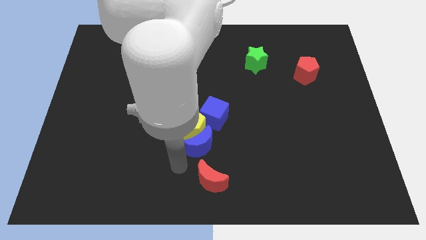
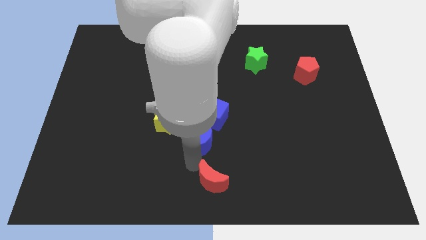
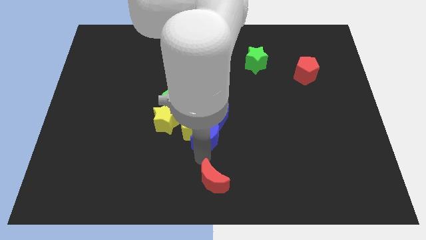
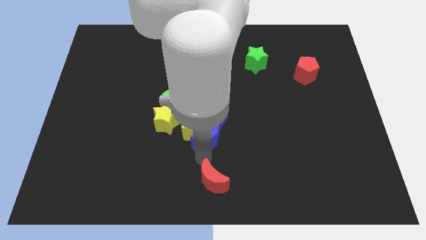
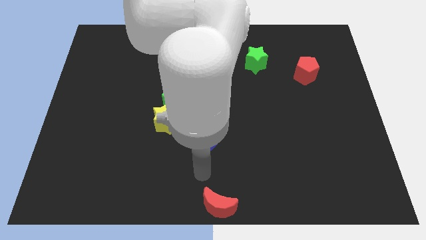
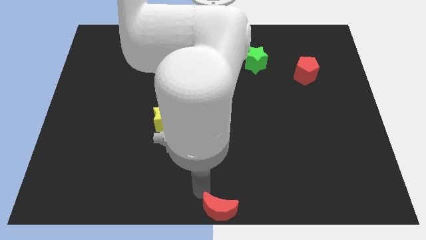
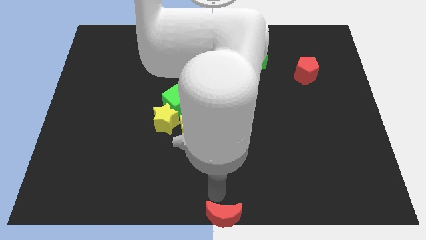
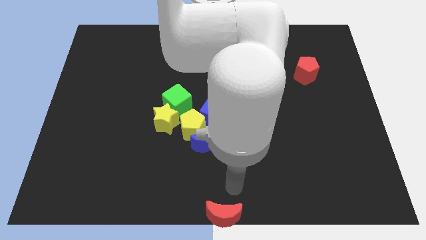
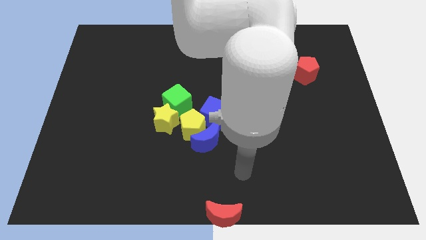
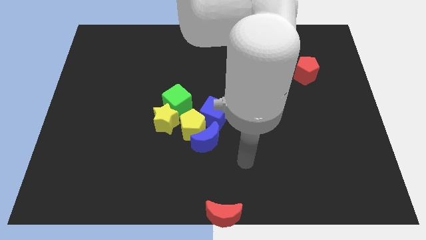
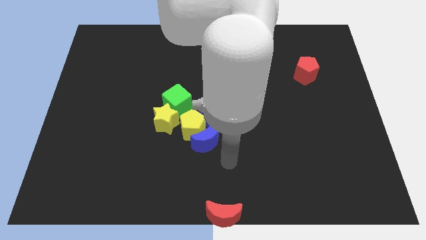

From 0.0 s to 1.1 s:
place the red crescent at the bottom center of the board

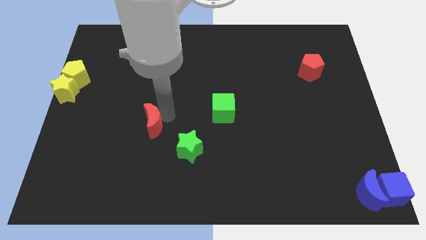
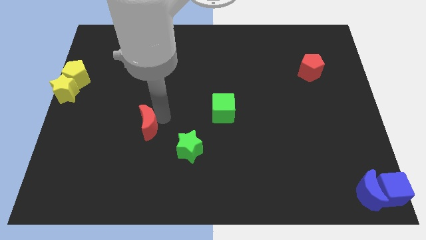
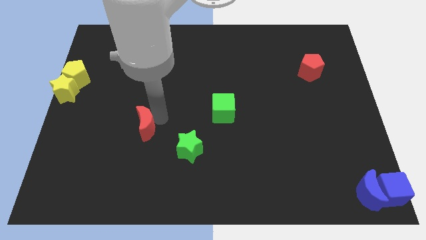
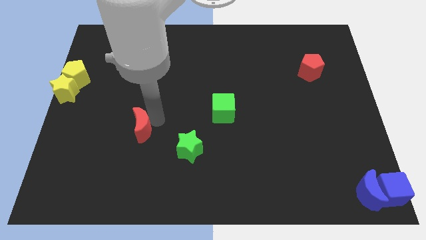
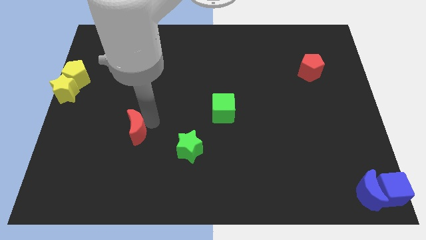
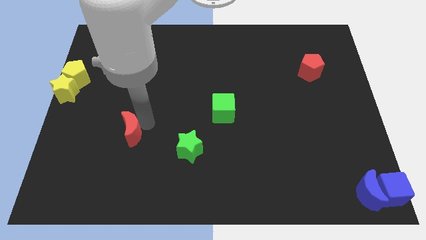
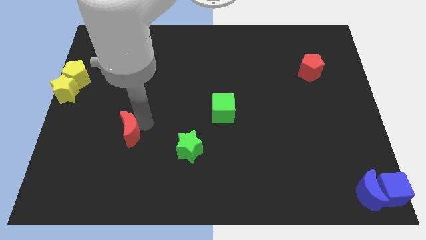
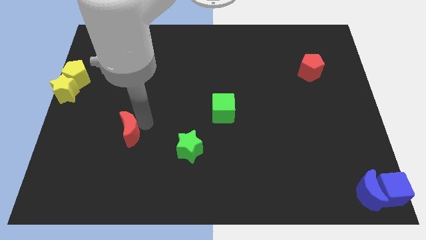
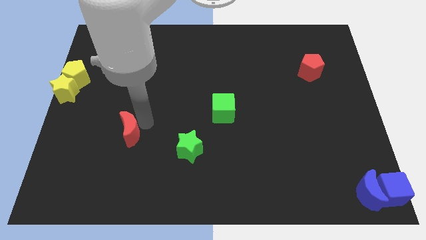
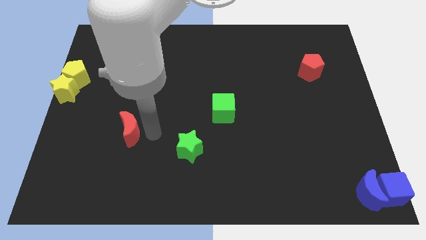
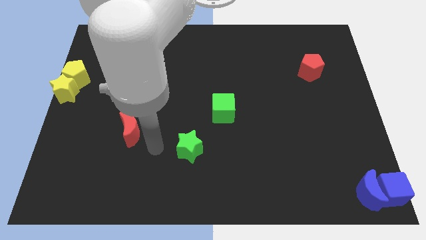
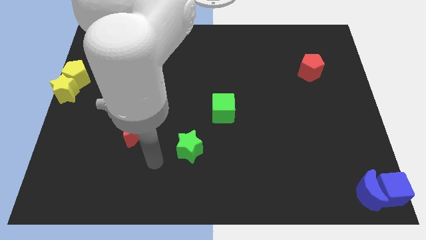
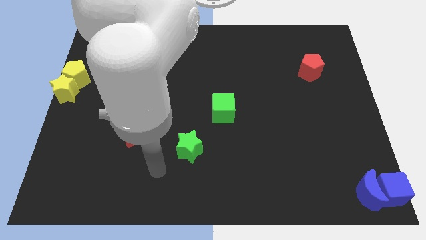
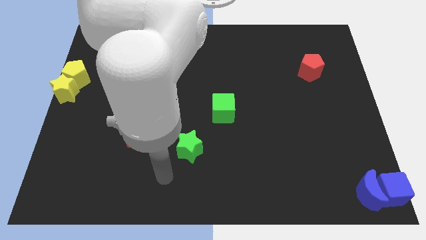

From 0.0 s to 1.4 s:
place the red moon diagonally top left to green star

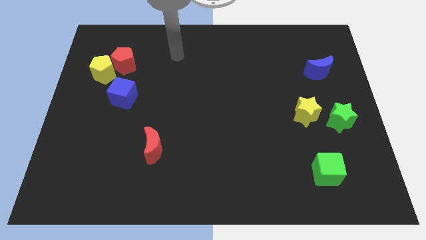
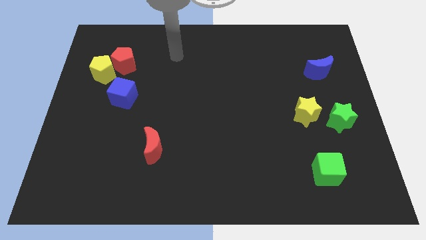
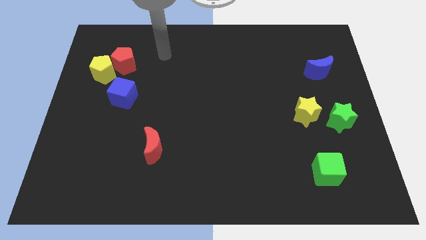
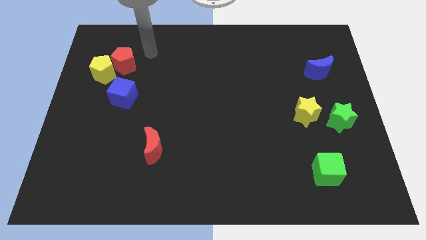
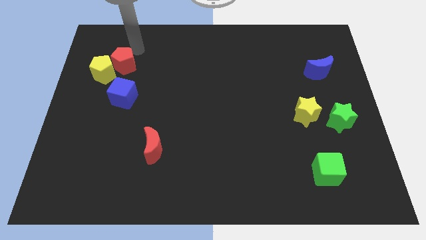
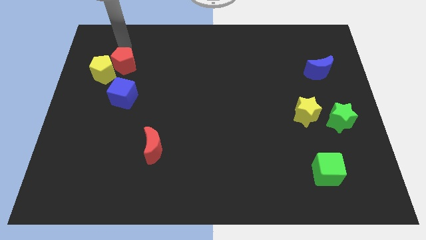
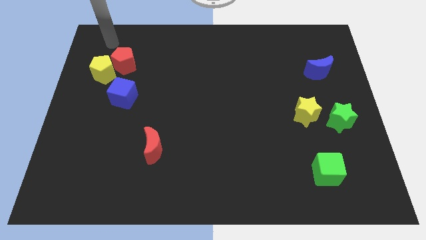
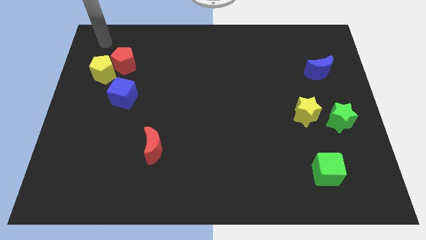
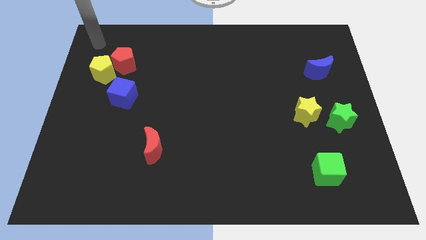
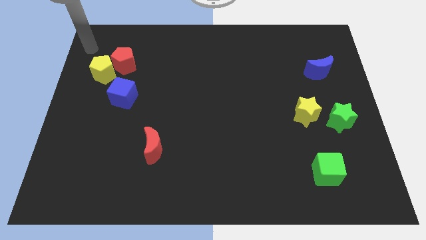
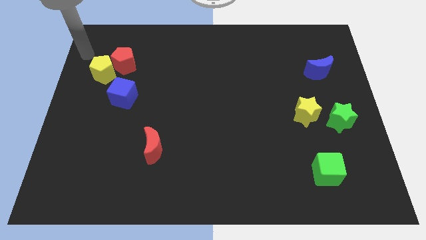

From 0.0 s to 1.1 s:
place your arm above yellow pentagon

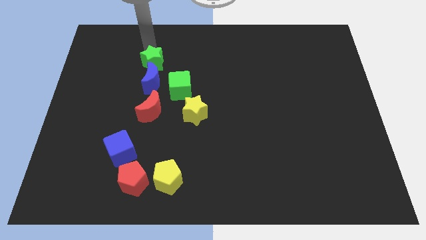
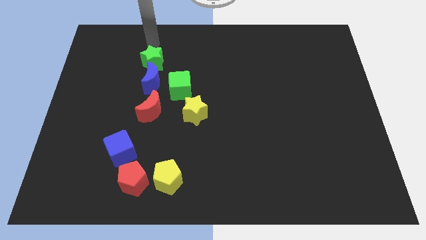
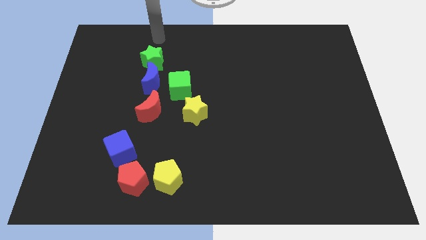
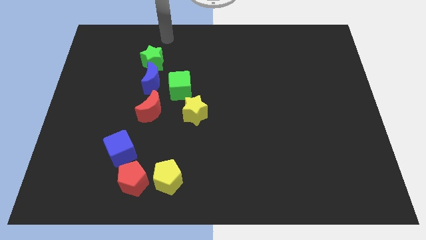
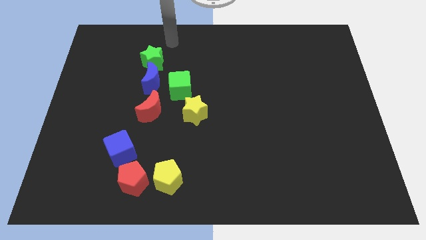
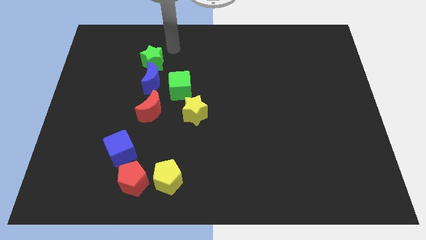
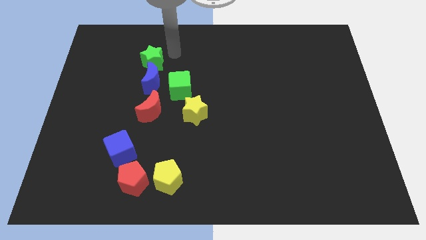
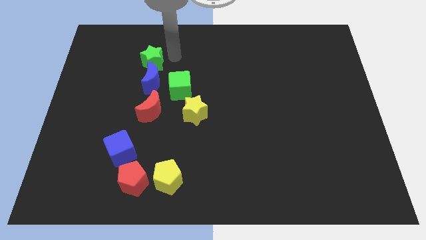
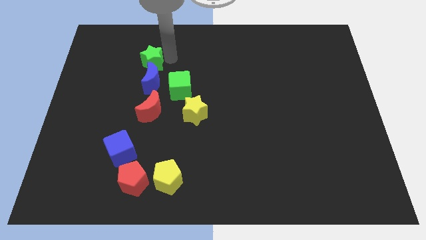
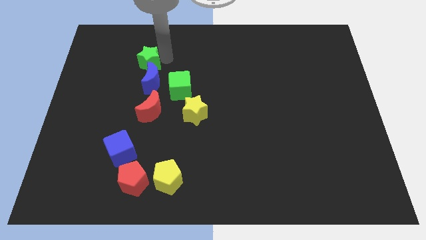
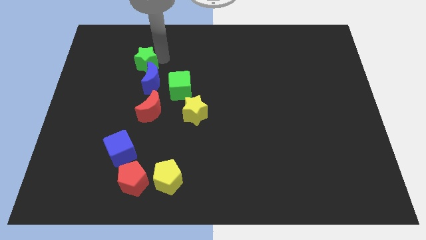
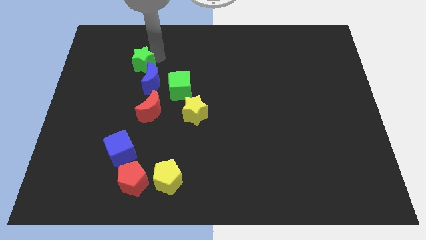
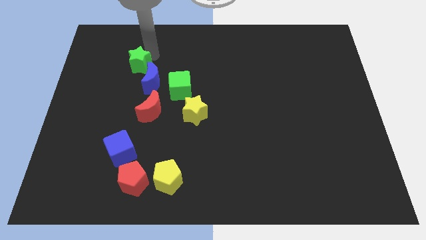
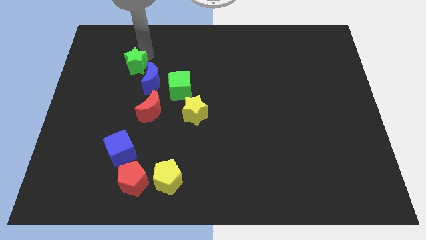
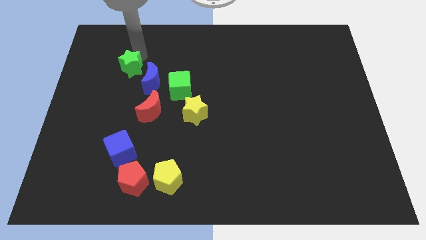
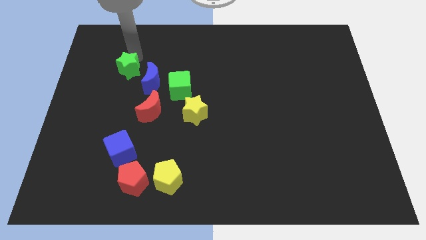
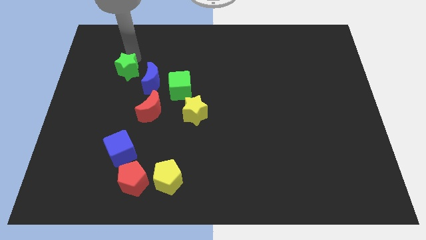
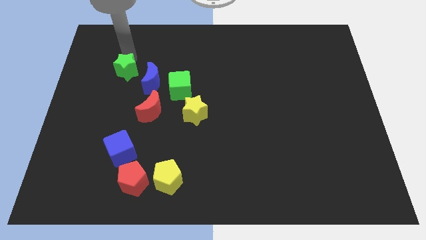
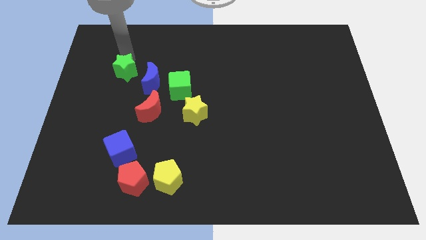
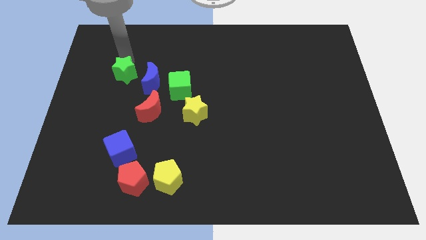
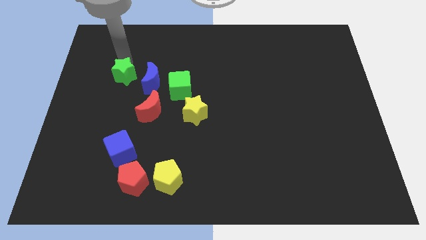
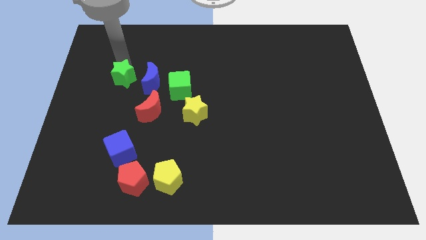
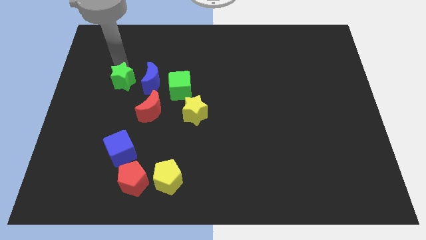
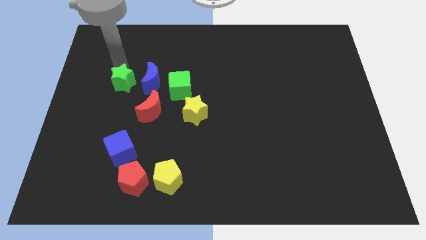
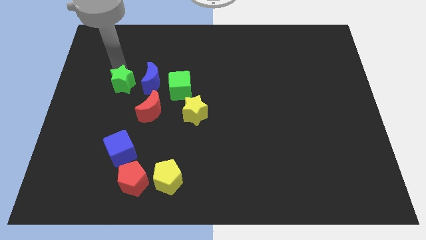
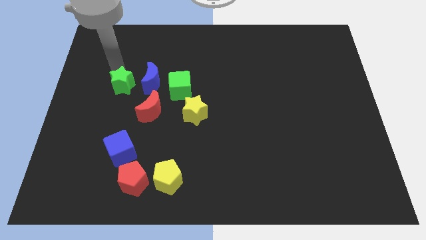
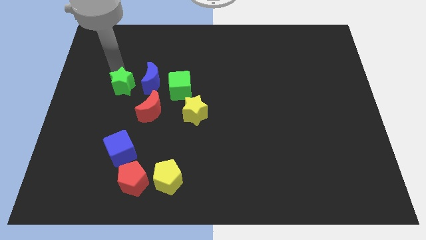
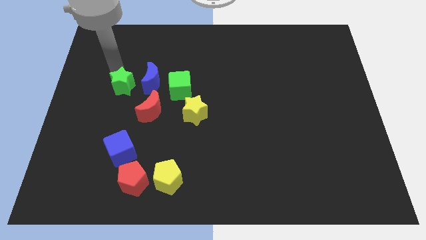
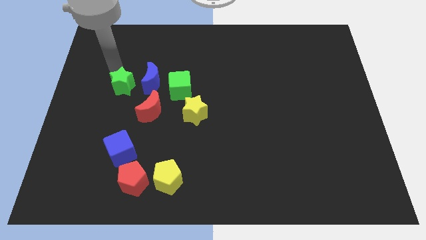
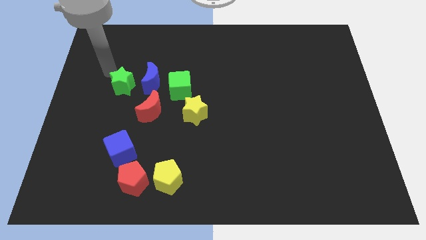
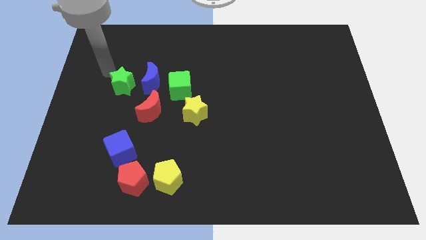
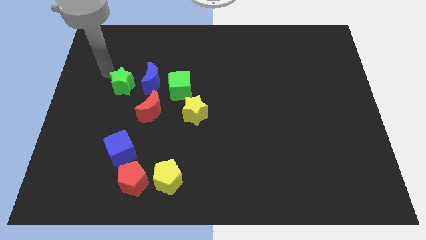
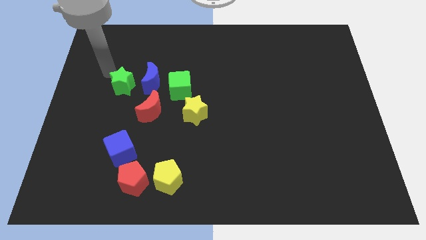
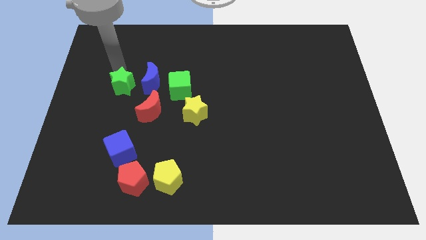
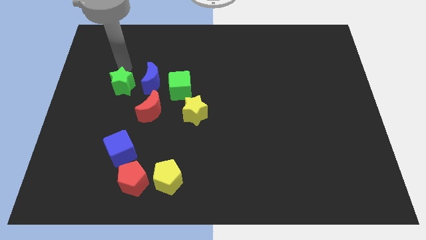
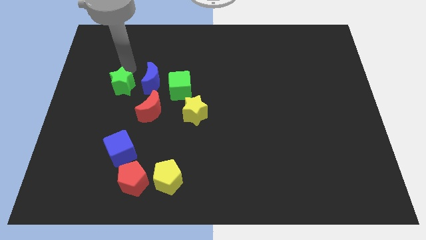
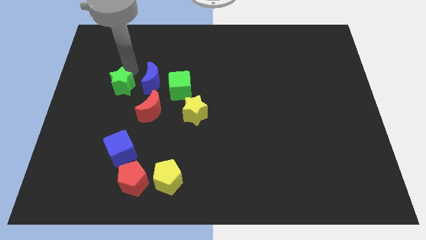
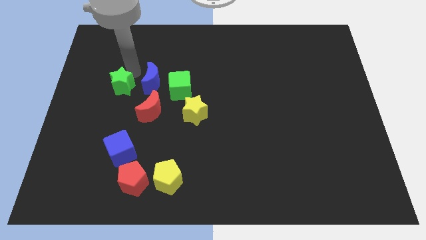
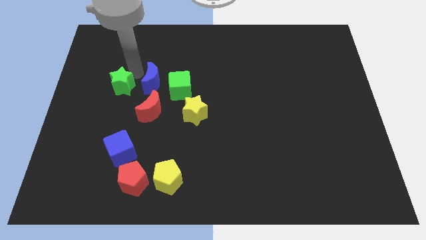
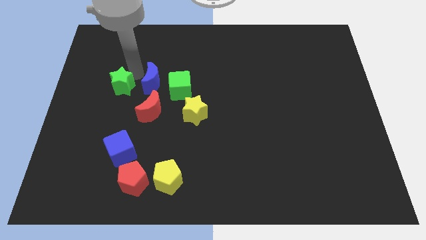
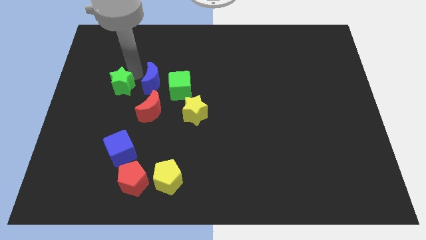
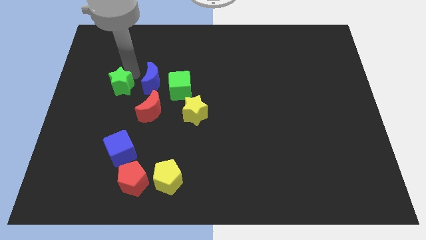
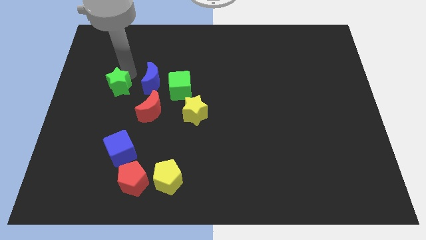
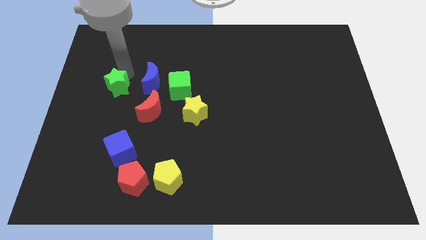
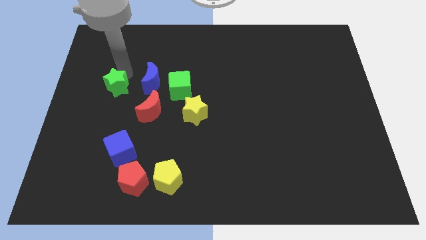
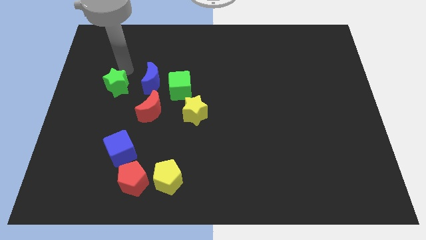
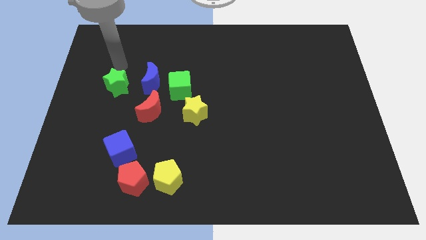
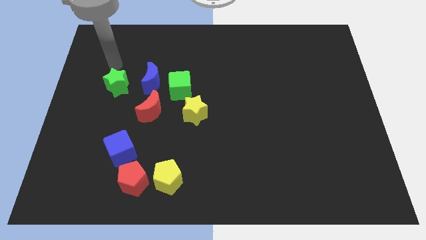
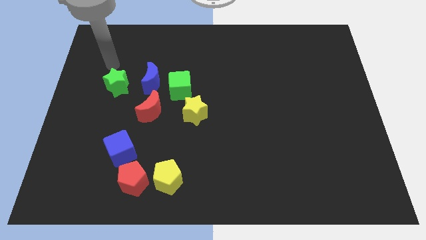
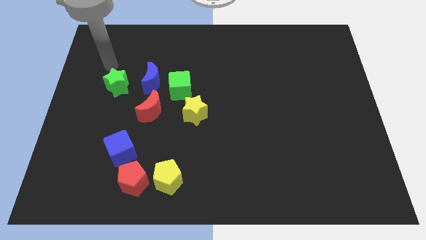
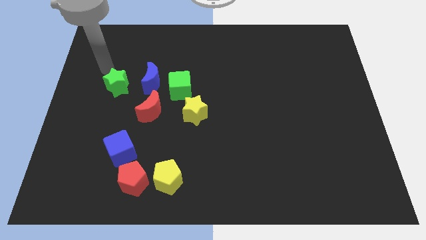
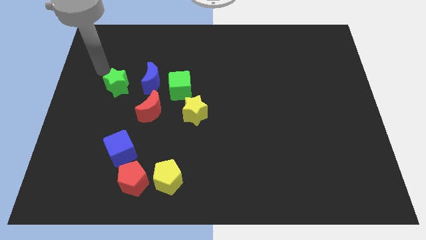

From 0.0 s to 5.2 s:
place the green star to the left of the blue moon

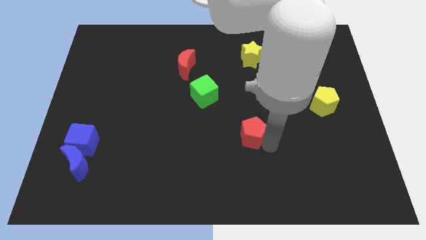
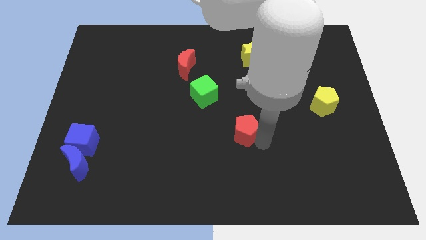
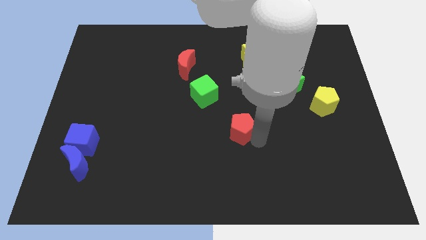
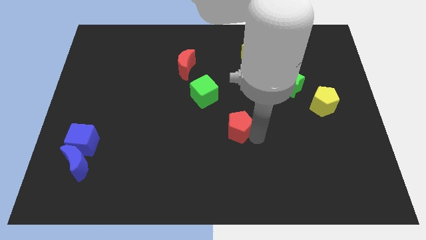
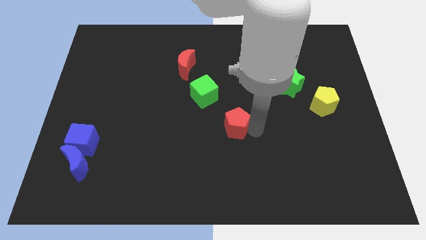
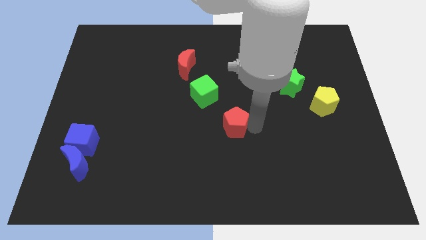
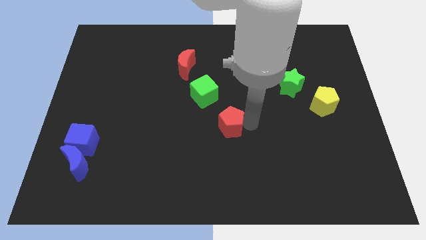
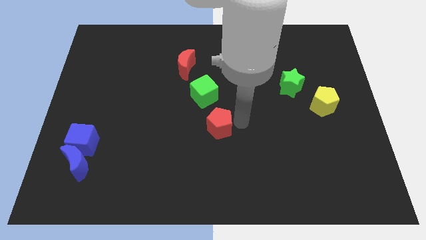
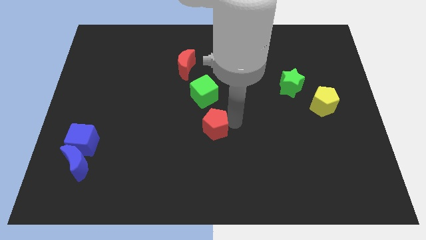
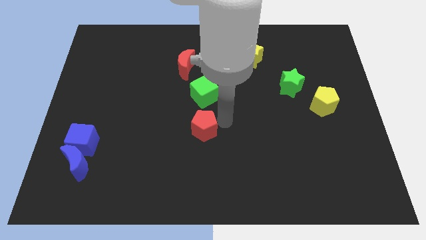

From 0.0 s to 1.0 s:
move the red pentagon below the green cube
